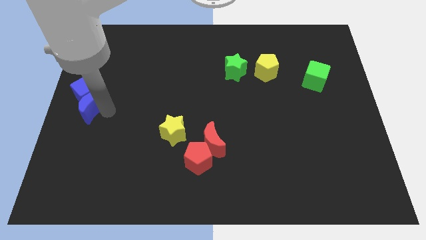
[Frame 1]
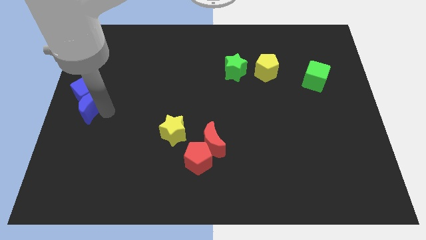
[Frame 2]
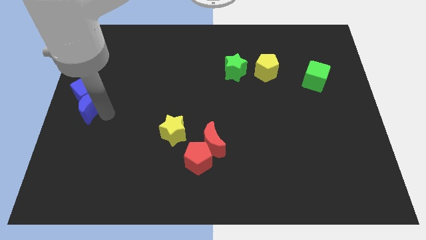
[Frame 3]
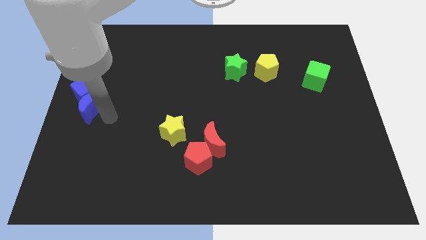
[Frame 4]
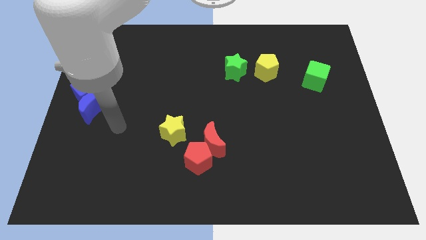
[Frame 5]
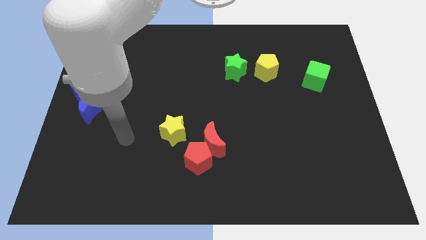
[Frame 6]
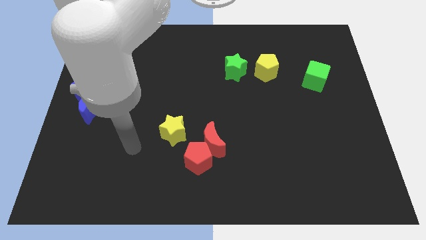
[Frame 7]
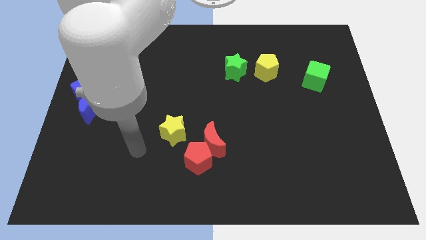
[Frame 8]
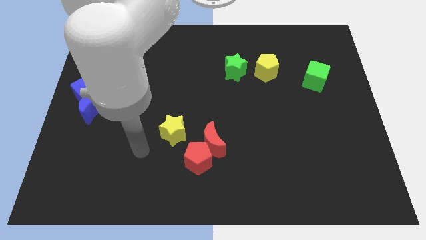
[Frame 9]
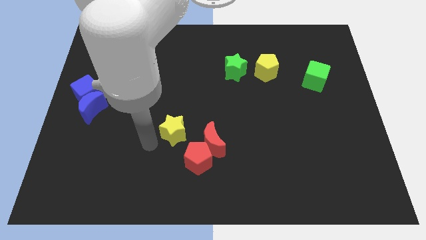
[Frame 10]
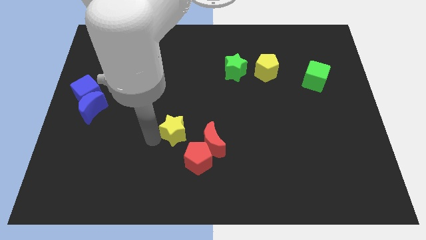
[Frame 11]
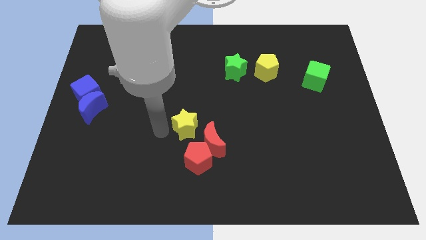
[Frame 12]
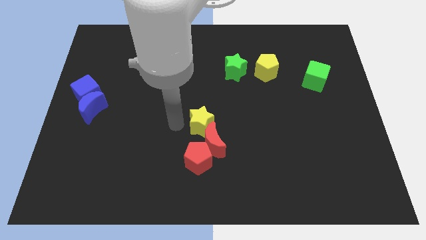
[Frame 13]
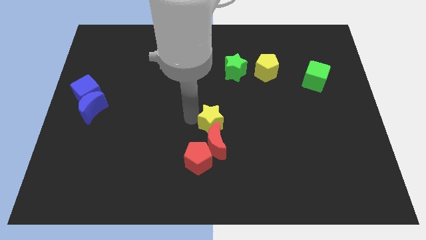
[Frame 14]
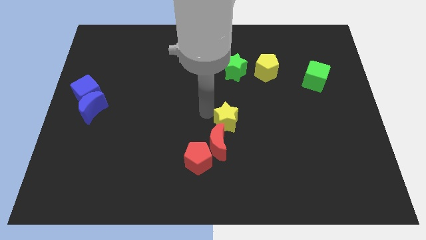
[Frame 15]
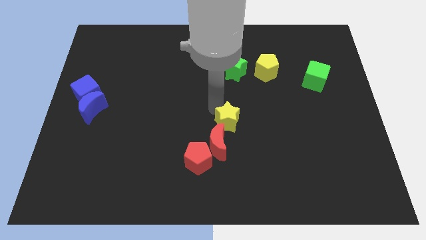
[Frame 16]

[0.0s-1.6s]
push the yellow star on top of red crescent

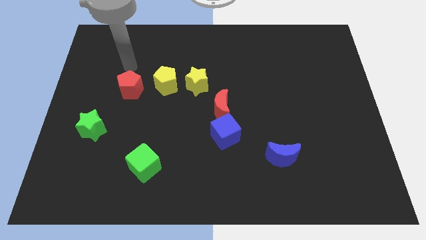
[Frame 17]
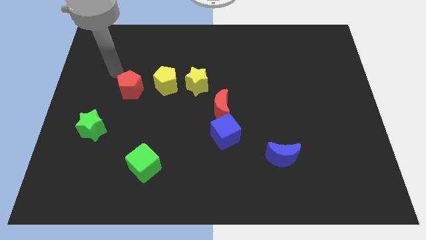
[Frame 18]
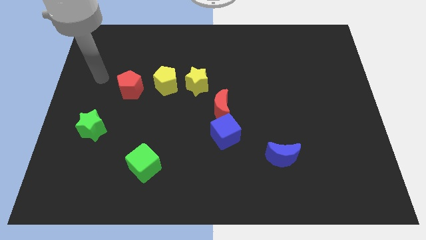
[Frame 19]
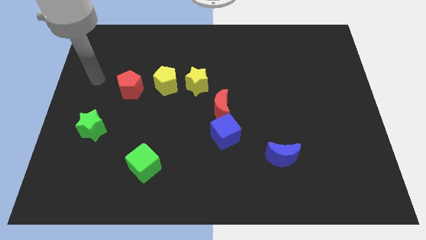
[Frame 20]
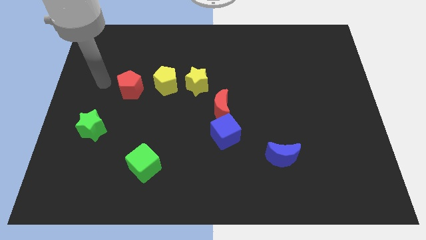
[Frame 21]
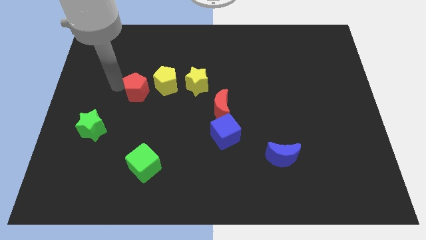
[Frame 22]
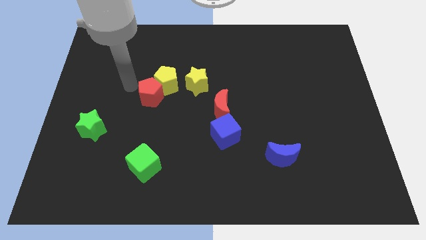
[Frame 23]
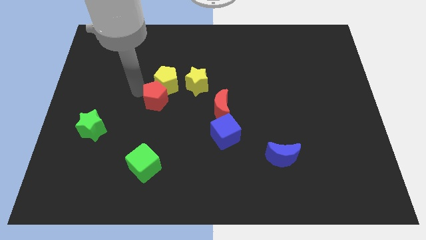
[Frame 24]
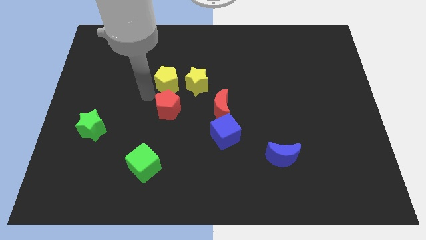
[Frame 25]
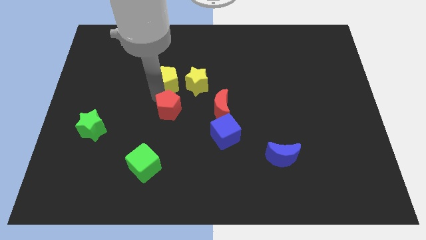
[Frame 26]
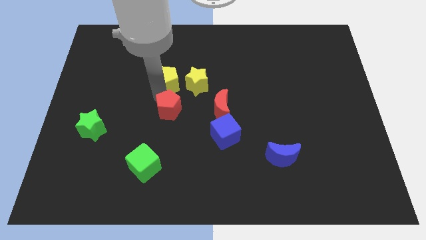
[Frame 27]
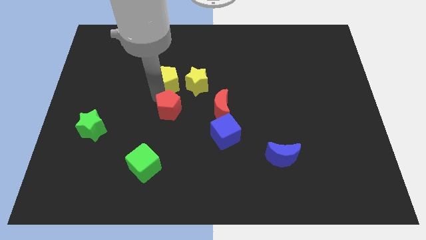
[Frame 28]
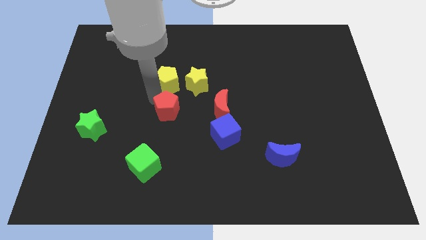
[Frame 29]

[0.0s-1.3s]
put the red pentagon to the left of the red crescent

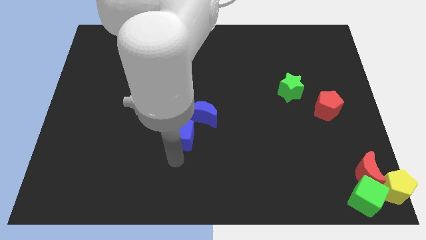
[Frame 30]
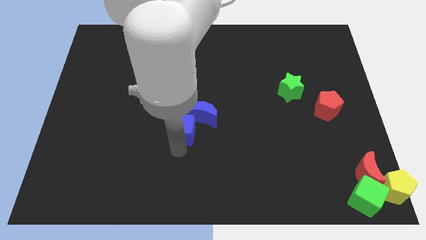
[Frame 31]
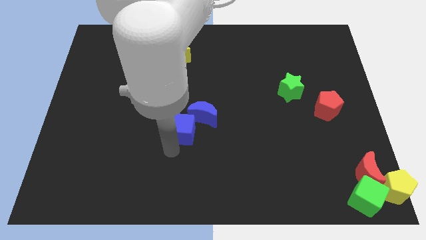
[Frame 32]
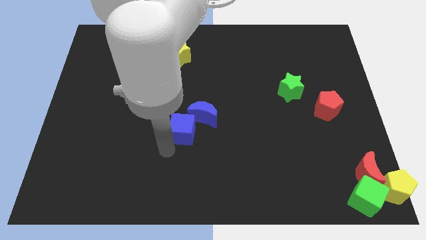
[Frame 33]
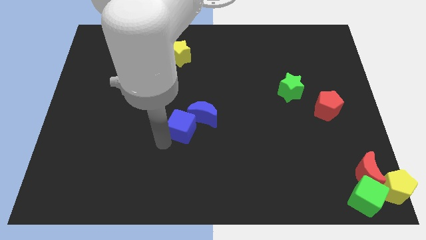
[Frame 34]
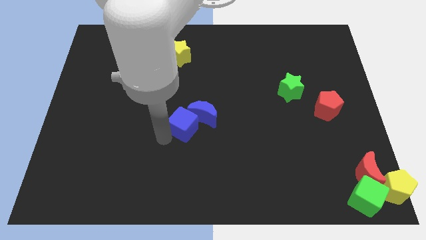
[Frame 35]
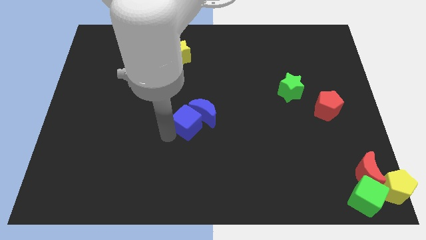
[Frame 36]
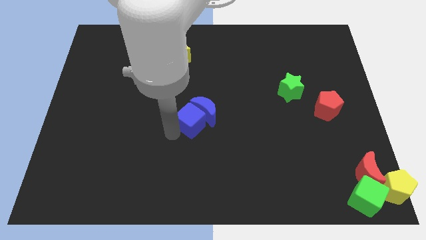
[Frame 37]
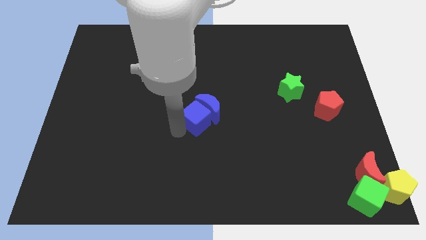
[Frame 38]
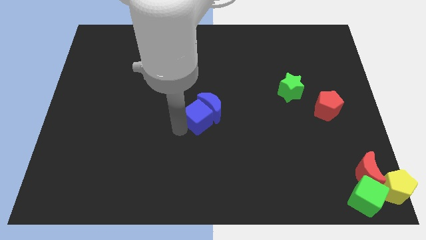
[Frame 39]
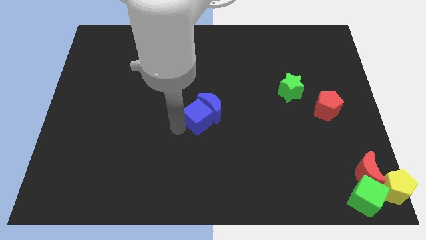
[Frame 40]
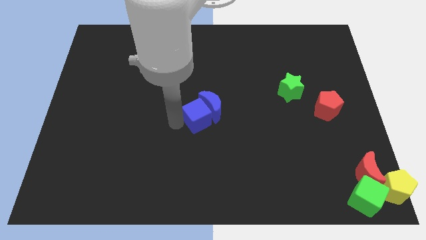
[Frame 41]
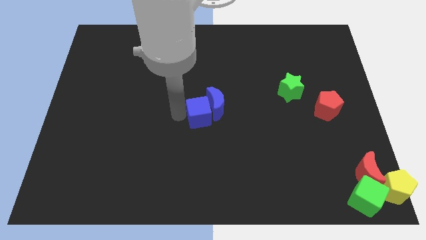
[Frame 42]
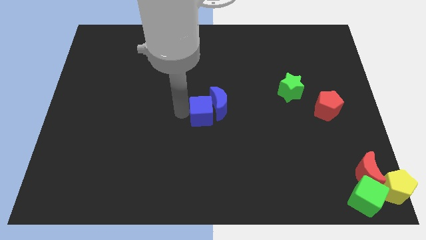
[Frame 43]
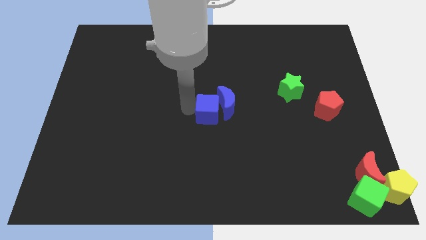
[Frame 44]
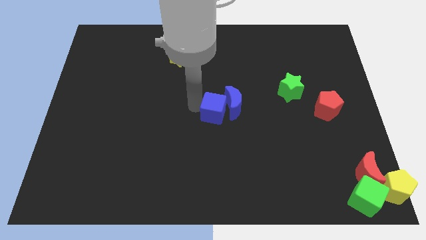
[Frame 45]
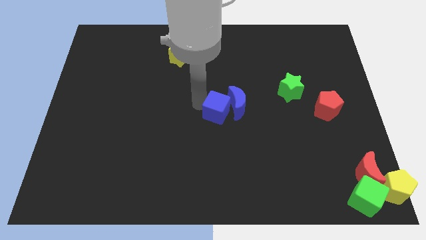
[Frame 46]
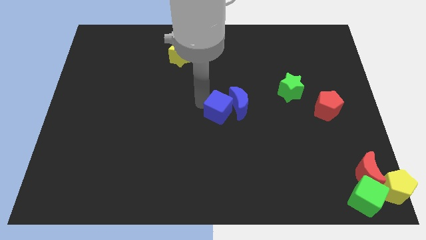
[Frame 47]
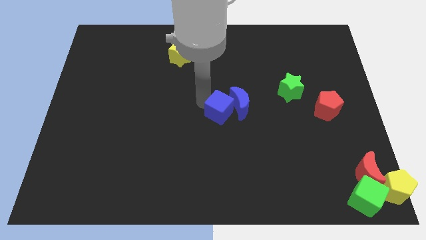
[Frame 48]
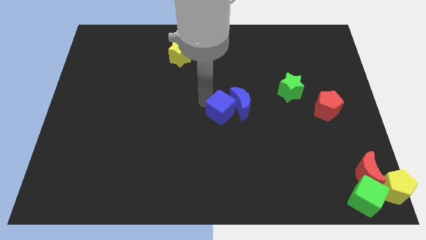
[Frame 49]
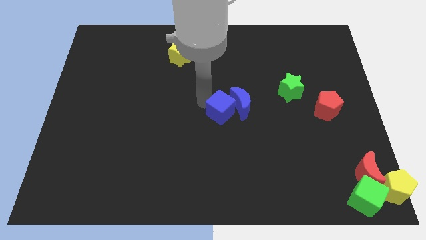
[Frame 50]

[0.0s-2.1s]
push the blue cube into the blue crescent towards the top right

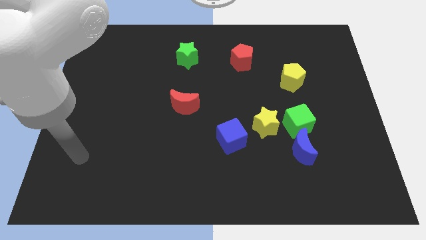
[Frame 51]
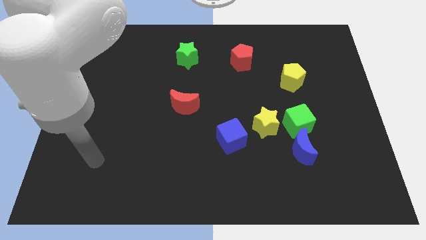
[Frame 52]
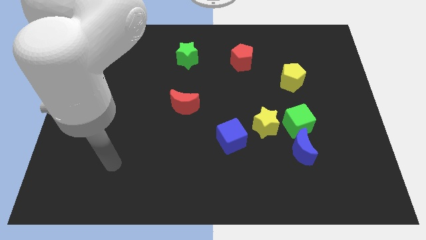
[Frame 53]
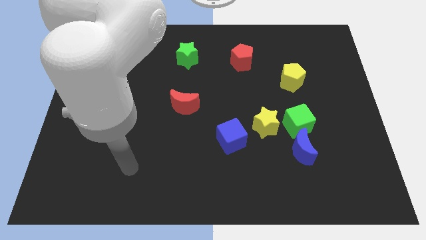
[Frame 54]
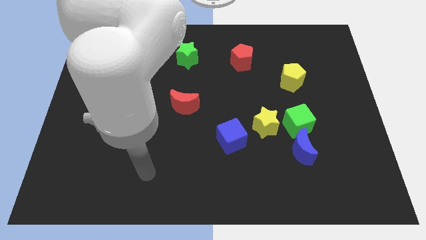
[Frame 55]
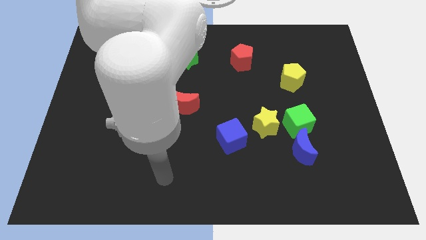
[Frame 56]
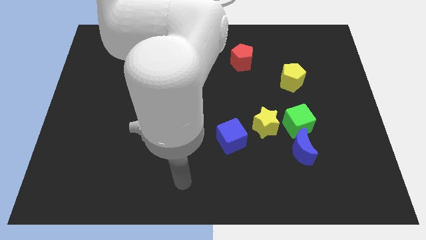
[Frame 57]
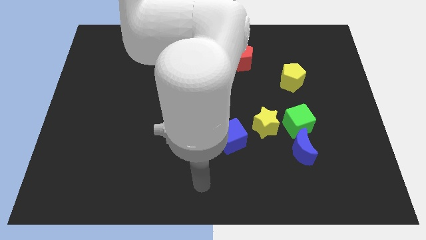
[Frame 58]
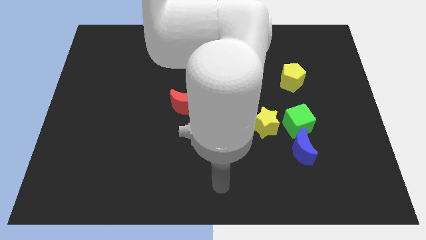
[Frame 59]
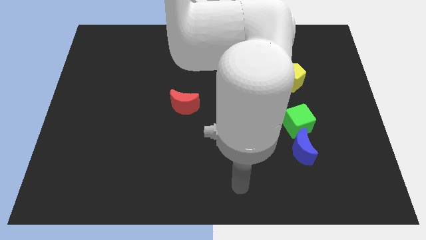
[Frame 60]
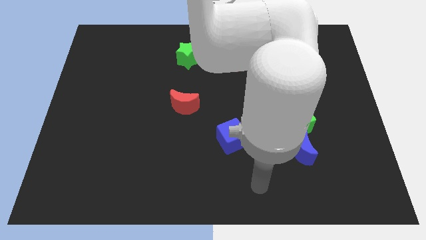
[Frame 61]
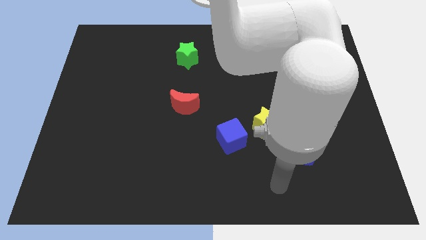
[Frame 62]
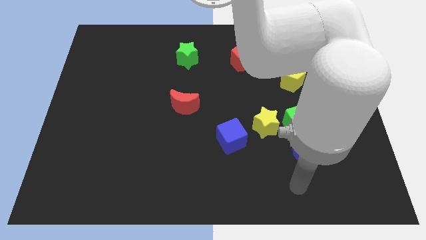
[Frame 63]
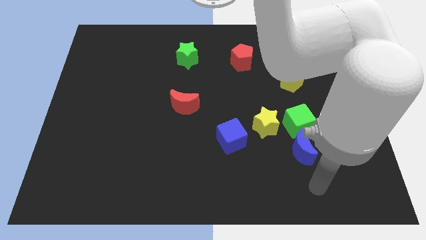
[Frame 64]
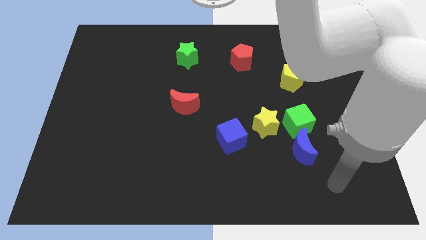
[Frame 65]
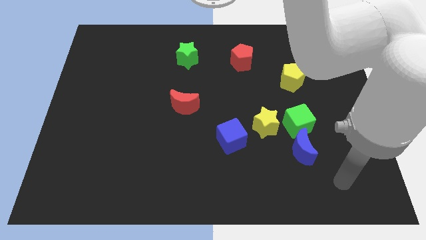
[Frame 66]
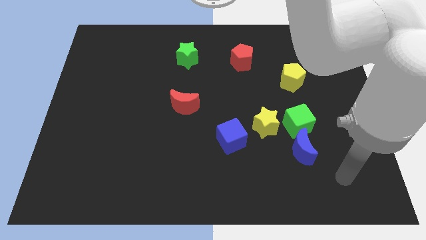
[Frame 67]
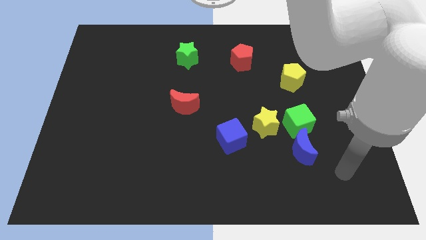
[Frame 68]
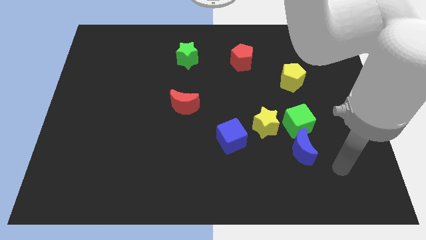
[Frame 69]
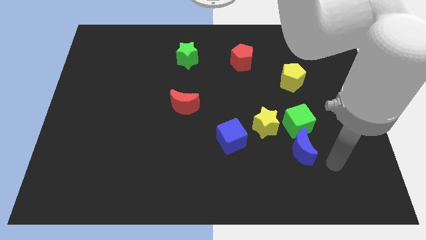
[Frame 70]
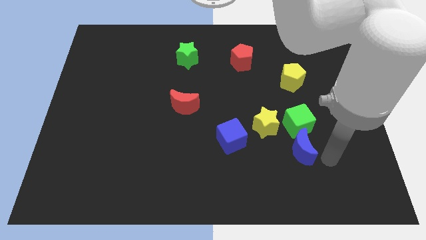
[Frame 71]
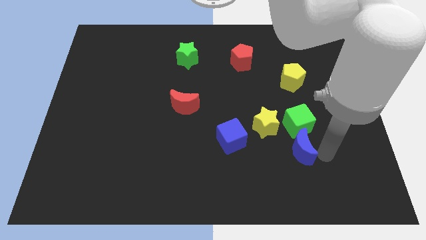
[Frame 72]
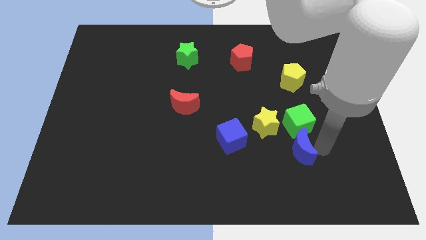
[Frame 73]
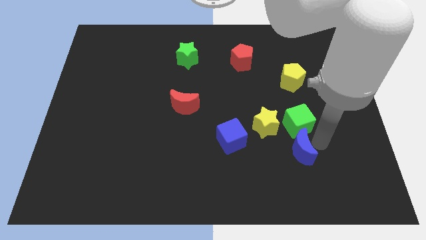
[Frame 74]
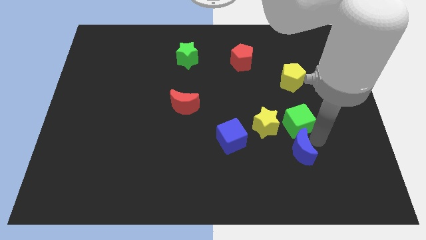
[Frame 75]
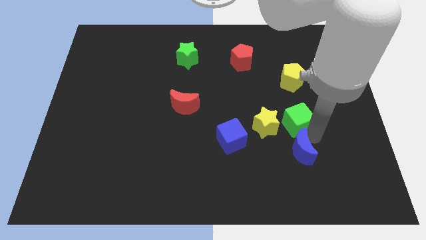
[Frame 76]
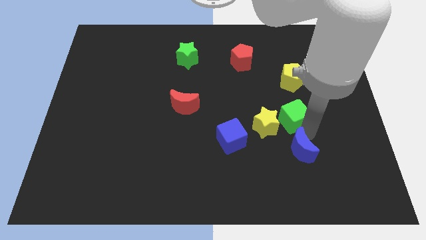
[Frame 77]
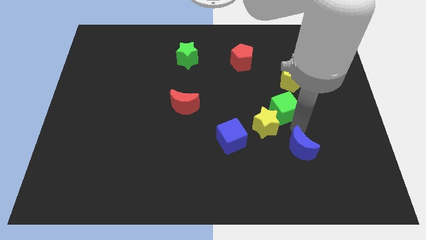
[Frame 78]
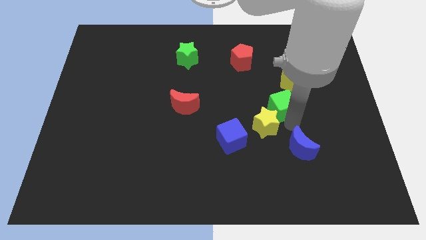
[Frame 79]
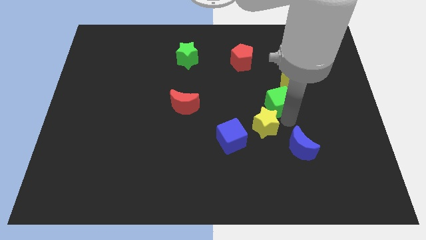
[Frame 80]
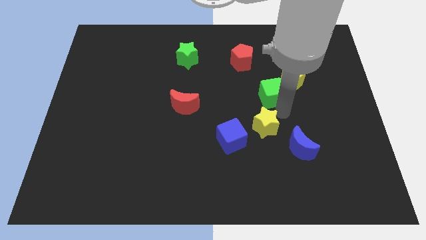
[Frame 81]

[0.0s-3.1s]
move the green cube to the bottom left of the yellow pentagon

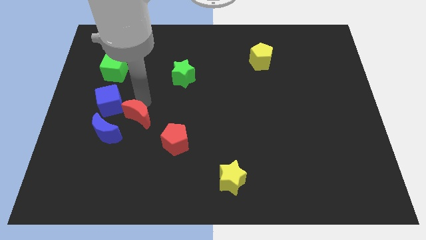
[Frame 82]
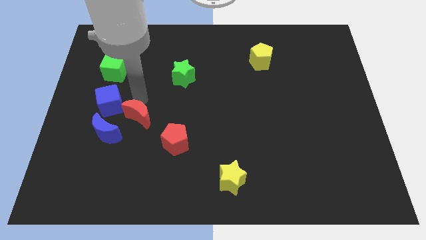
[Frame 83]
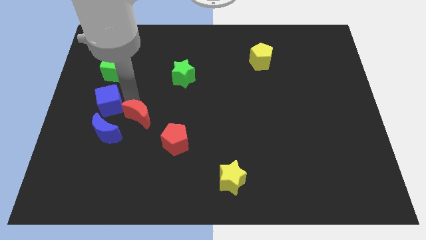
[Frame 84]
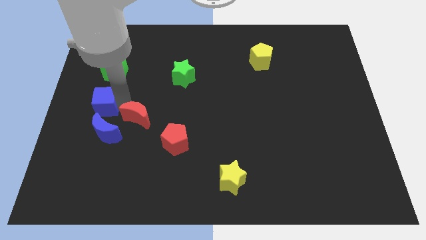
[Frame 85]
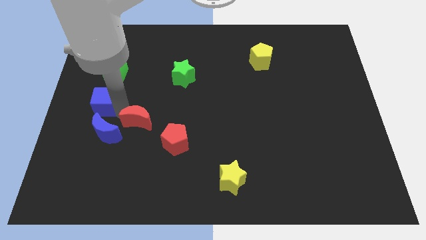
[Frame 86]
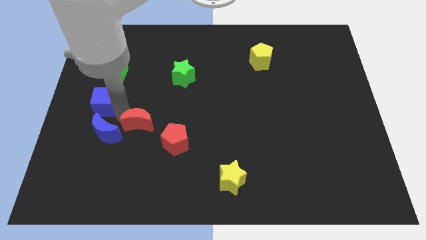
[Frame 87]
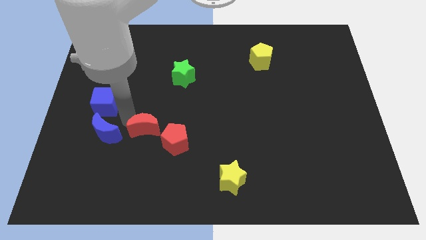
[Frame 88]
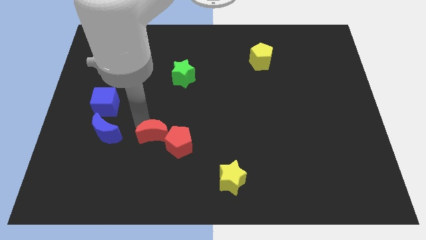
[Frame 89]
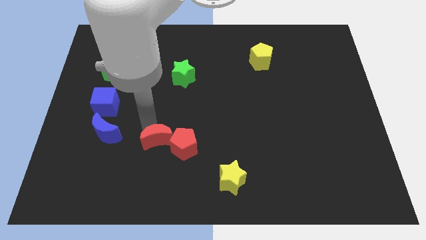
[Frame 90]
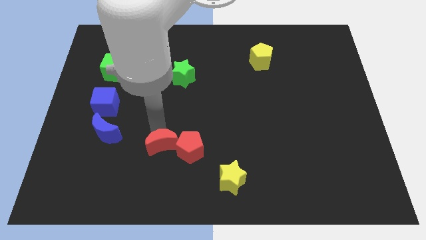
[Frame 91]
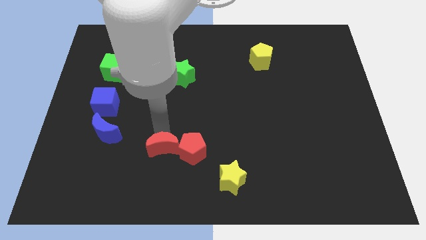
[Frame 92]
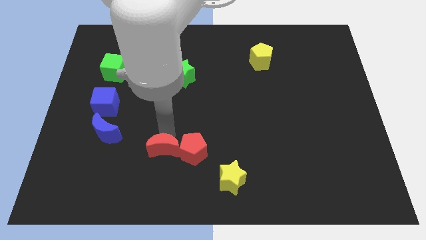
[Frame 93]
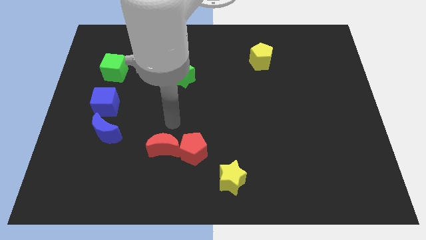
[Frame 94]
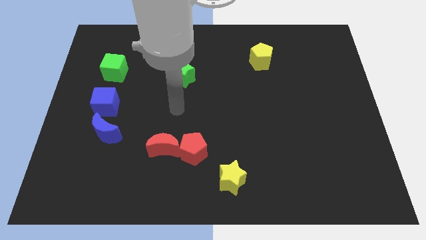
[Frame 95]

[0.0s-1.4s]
push the red crescent towards the yellow star along with the red pentagon
